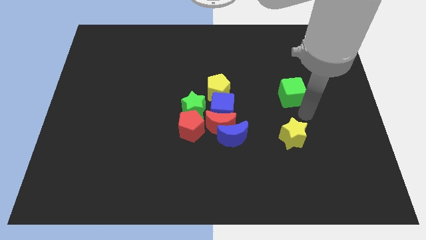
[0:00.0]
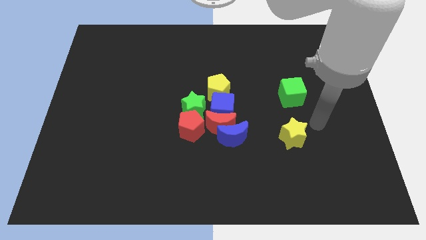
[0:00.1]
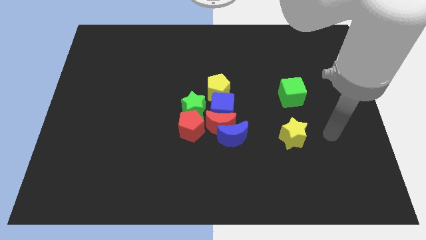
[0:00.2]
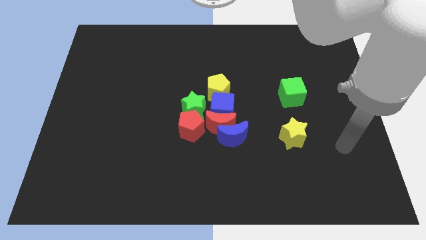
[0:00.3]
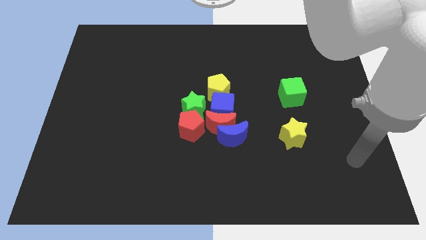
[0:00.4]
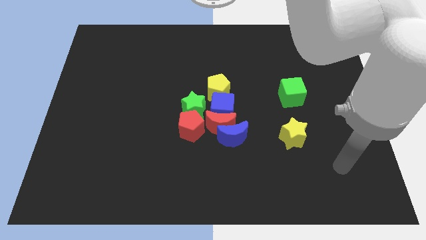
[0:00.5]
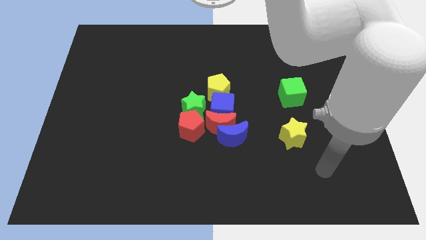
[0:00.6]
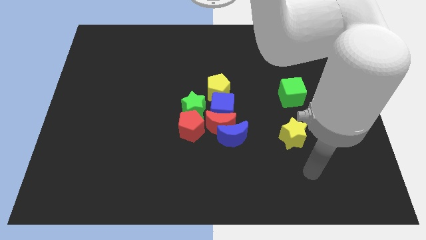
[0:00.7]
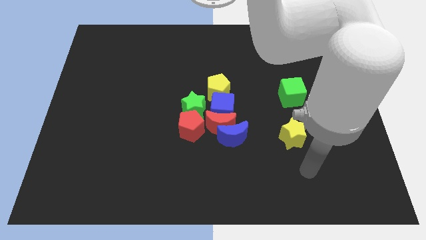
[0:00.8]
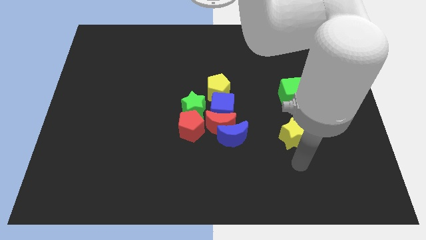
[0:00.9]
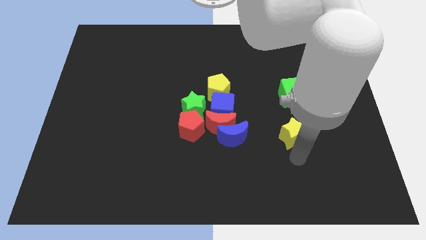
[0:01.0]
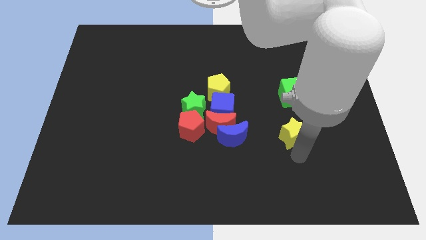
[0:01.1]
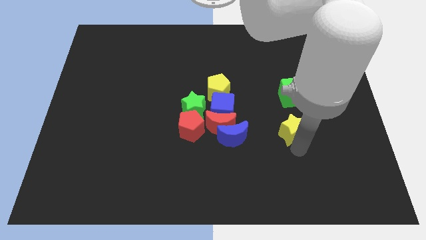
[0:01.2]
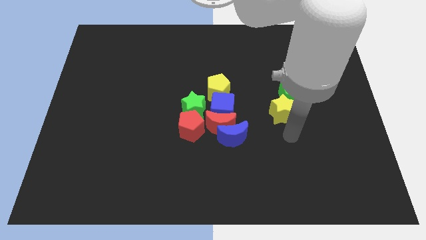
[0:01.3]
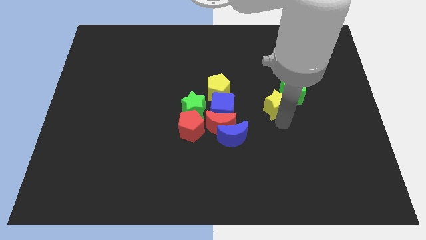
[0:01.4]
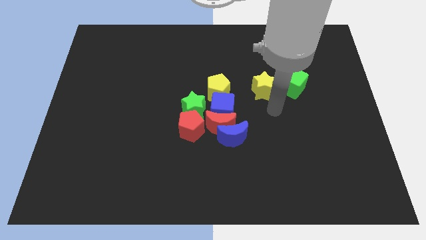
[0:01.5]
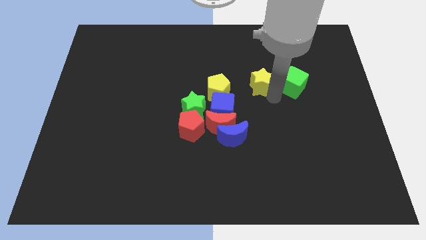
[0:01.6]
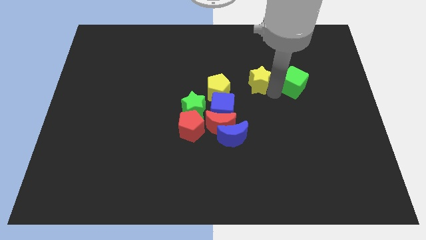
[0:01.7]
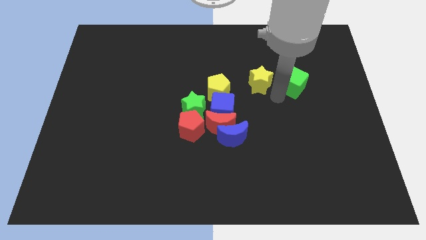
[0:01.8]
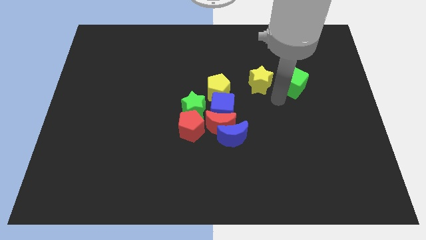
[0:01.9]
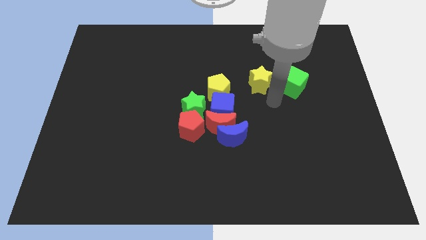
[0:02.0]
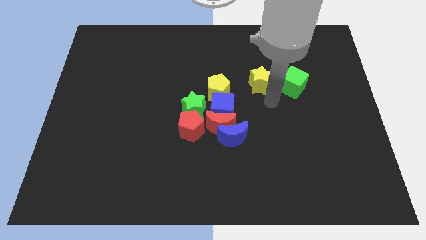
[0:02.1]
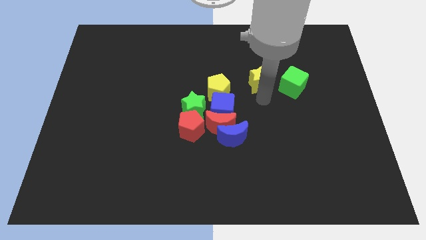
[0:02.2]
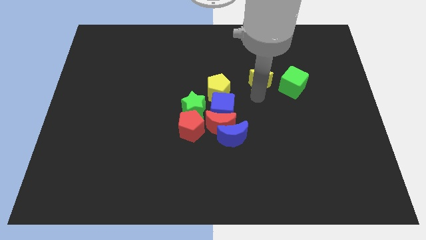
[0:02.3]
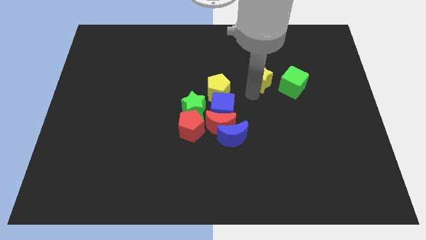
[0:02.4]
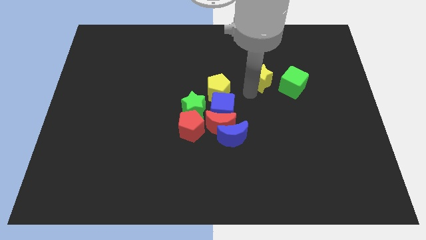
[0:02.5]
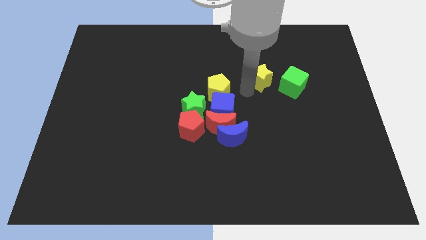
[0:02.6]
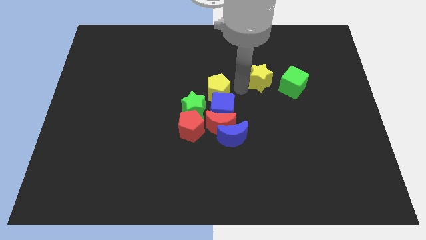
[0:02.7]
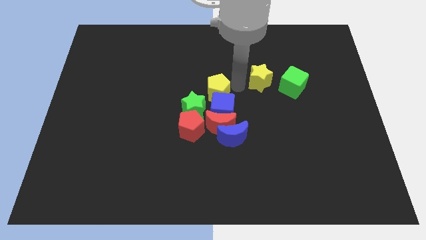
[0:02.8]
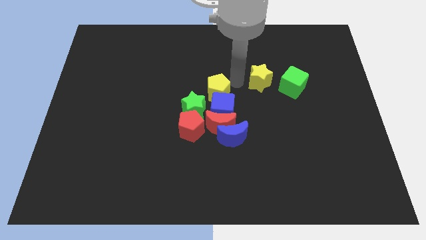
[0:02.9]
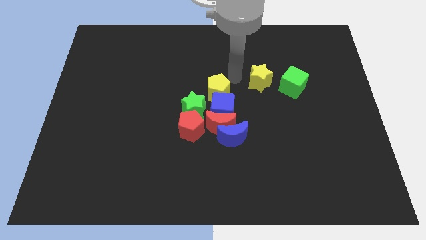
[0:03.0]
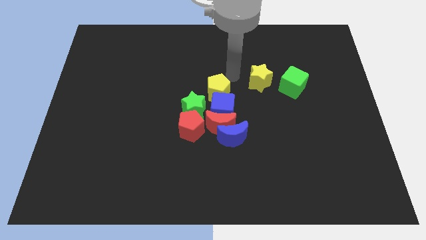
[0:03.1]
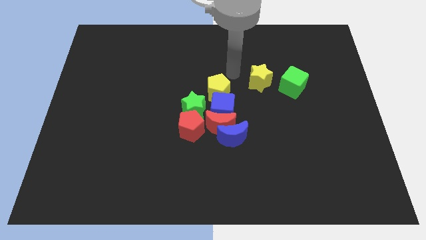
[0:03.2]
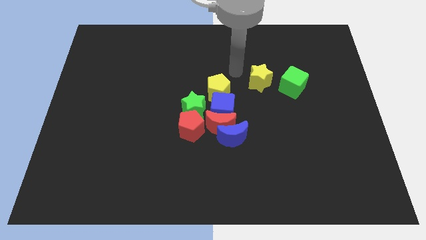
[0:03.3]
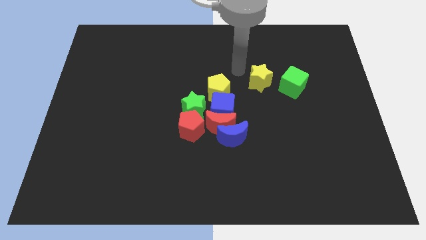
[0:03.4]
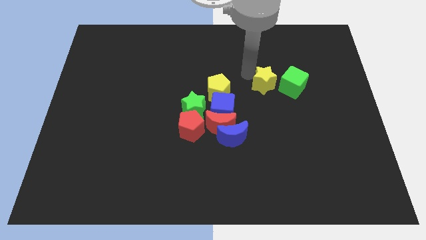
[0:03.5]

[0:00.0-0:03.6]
place the yellow star to the left side of the green cube

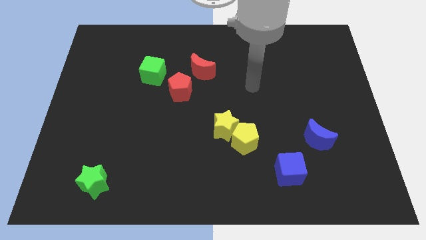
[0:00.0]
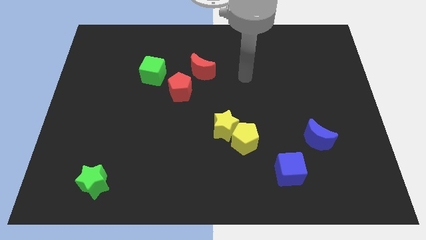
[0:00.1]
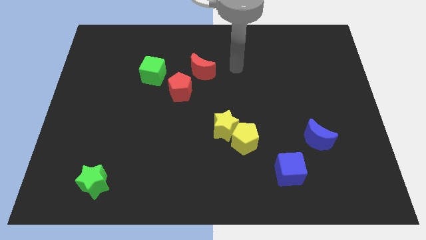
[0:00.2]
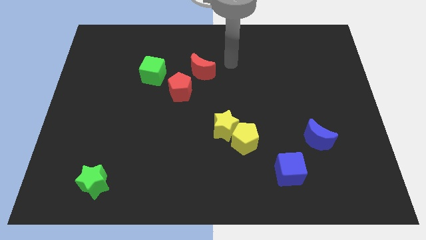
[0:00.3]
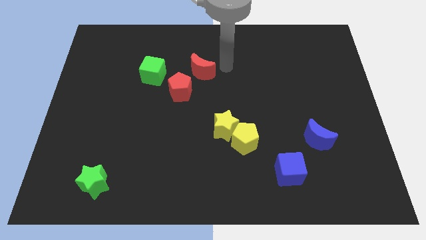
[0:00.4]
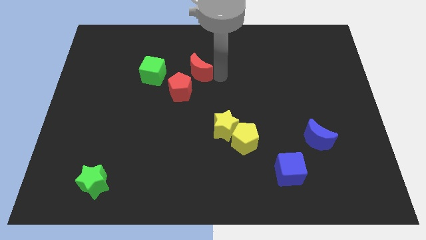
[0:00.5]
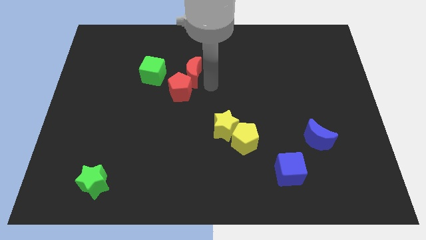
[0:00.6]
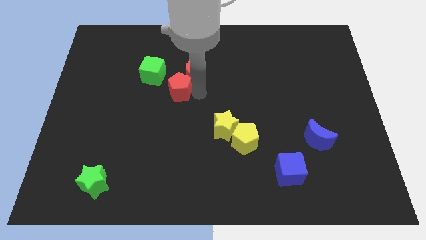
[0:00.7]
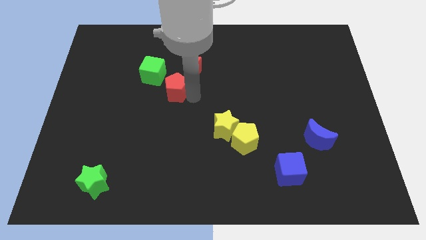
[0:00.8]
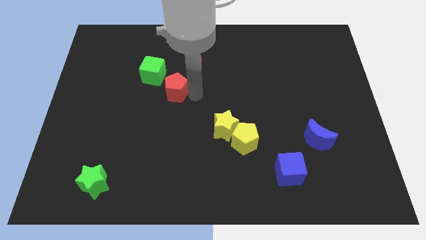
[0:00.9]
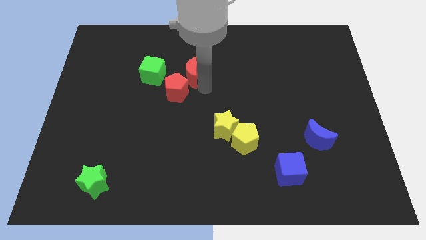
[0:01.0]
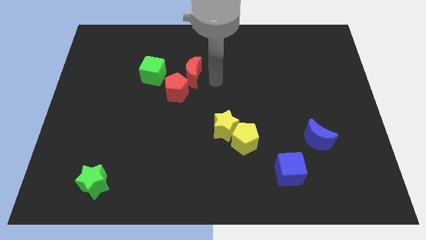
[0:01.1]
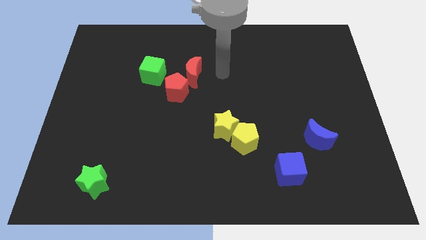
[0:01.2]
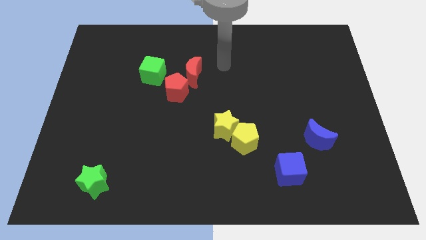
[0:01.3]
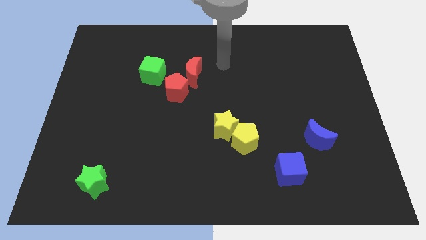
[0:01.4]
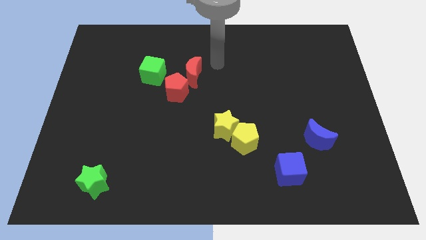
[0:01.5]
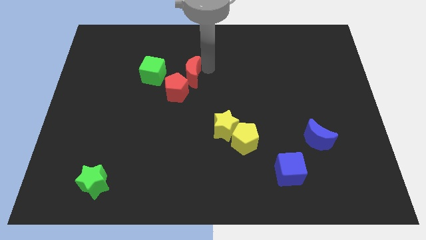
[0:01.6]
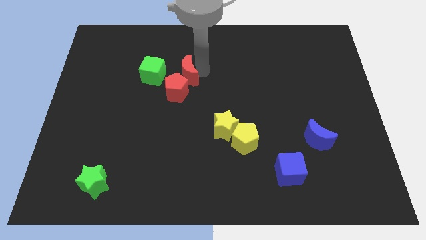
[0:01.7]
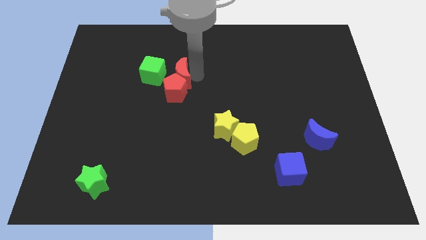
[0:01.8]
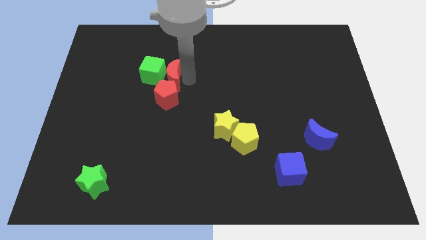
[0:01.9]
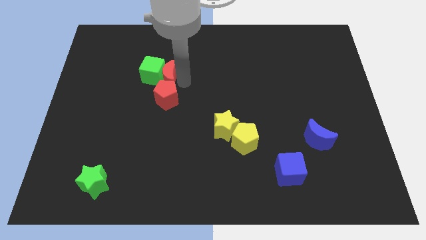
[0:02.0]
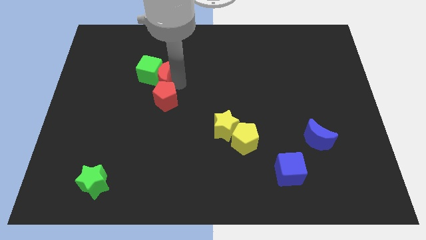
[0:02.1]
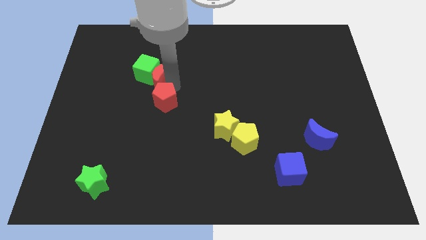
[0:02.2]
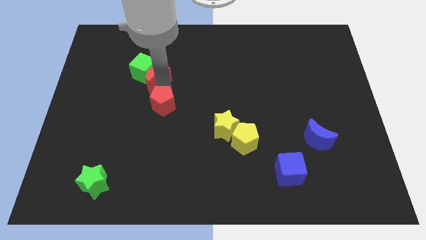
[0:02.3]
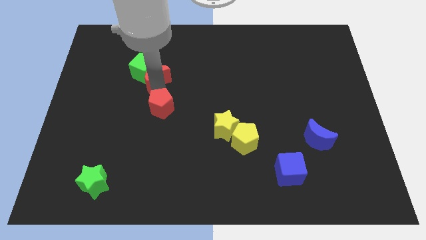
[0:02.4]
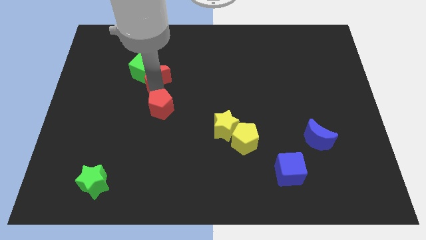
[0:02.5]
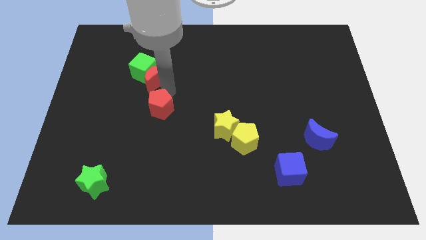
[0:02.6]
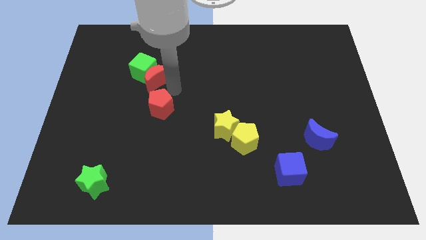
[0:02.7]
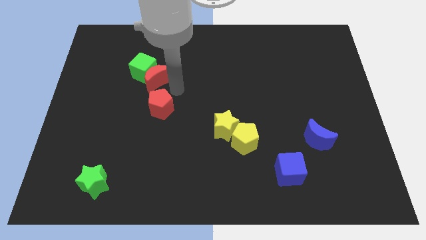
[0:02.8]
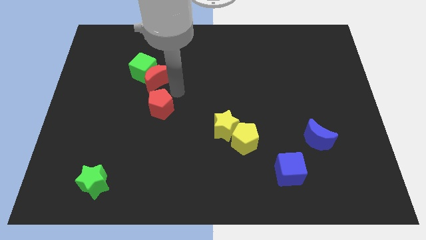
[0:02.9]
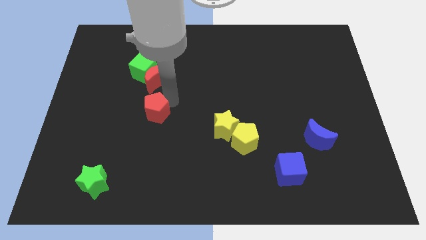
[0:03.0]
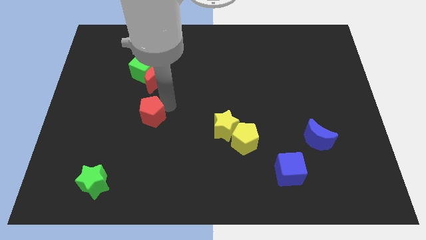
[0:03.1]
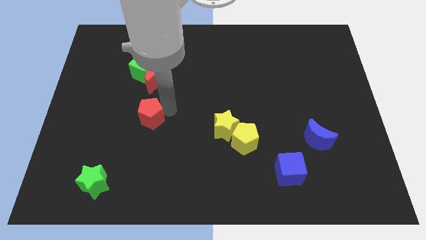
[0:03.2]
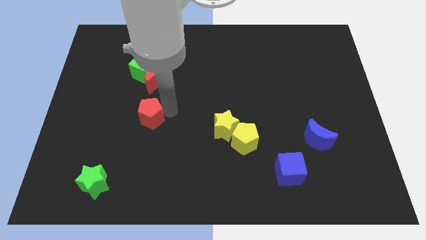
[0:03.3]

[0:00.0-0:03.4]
push the red blocks towards the green star

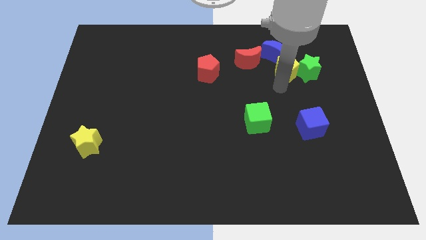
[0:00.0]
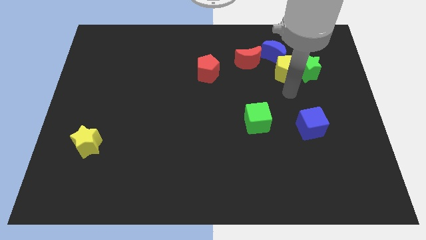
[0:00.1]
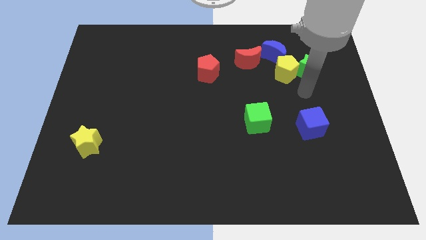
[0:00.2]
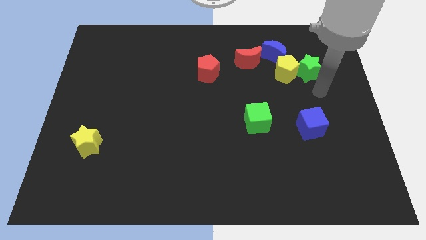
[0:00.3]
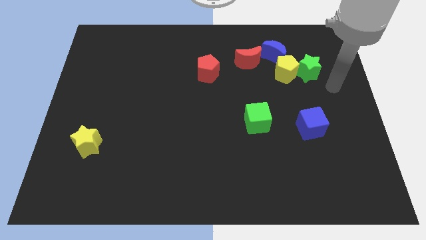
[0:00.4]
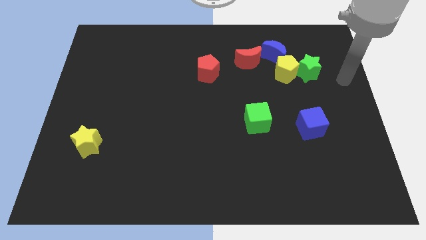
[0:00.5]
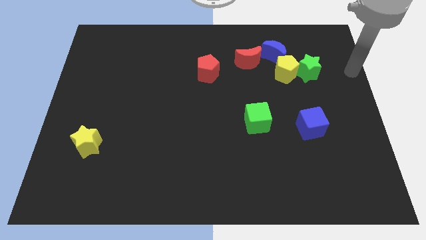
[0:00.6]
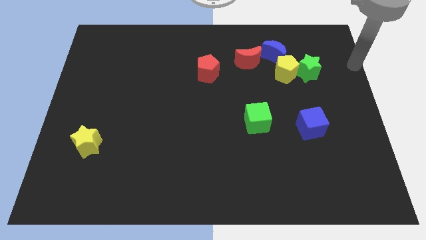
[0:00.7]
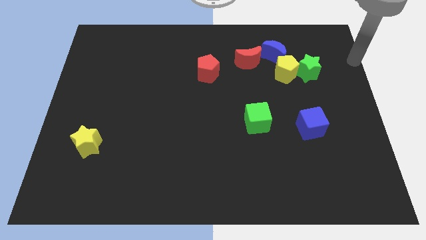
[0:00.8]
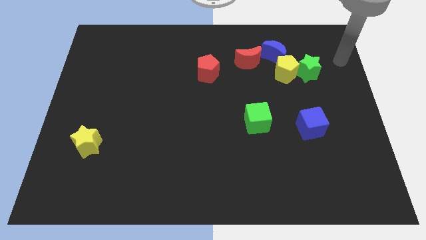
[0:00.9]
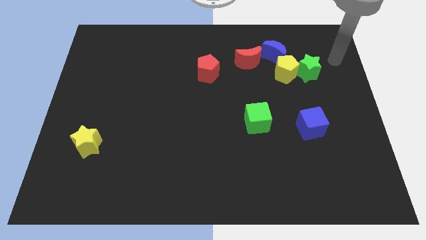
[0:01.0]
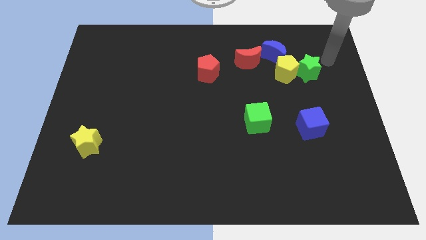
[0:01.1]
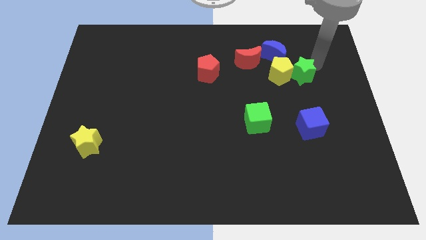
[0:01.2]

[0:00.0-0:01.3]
move your arm to the right of the green star

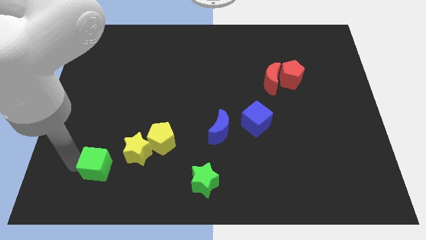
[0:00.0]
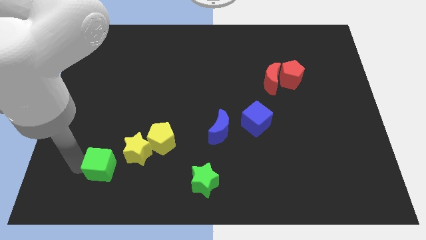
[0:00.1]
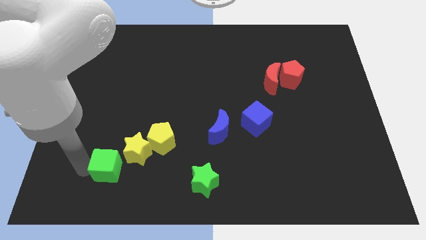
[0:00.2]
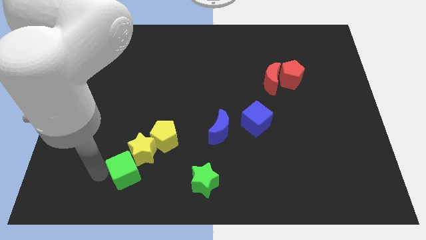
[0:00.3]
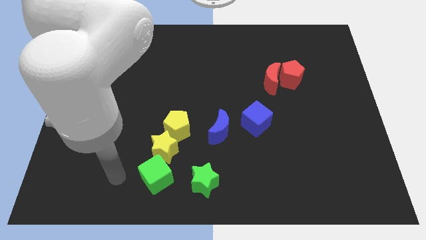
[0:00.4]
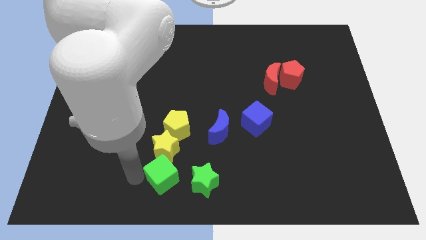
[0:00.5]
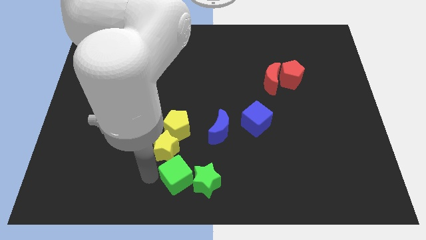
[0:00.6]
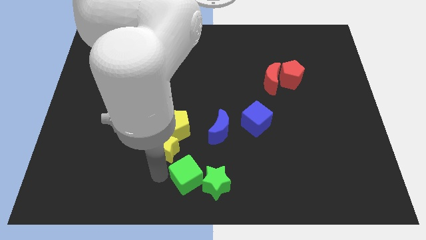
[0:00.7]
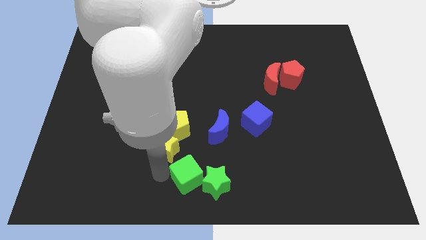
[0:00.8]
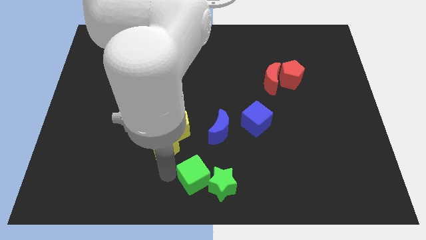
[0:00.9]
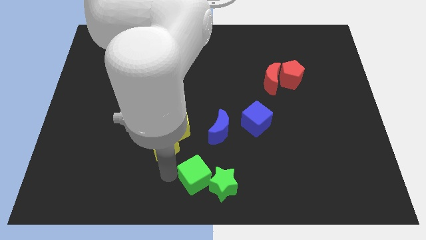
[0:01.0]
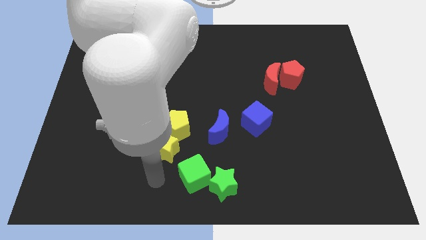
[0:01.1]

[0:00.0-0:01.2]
push the green cube into the green star
